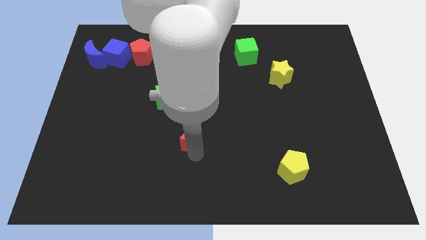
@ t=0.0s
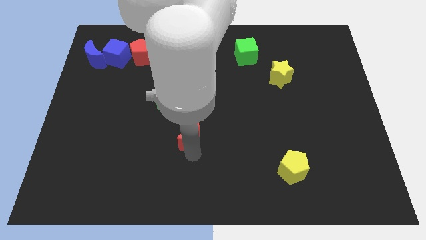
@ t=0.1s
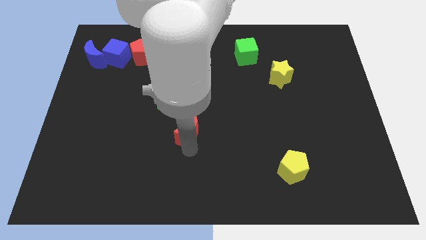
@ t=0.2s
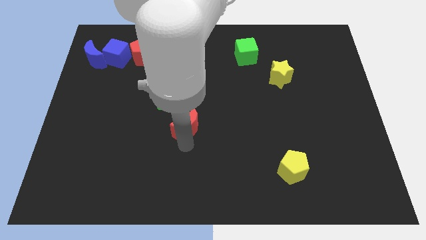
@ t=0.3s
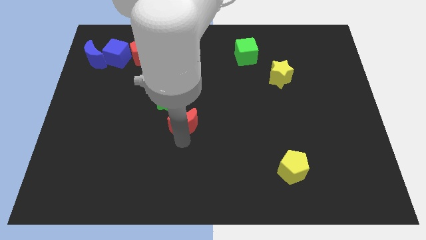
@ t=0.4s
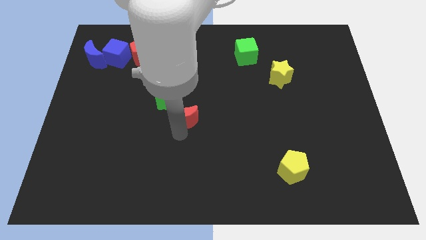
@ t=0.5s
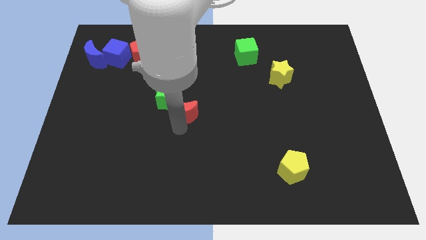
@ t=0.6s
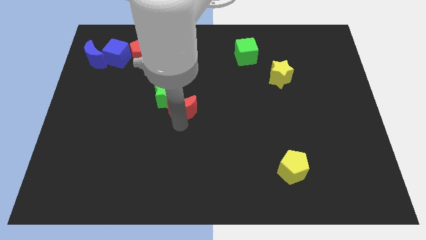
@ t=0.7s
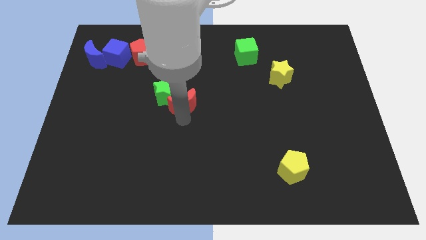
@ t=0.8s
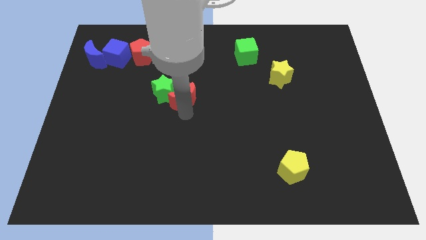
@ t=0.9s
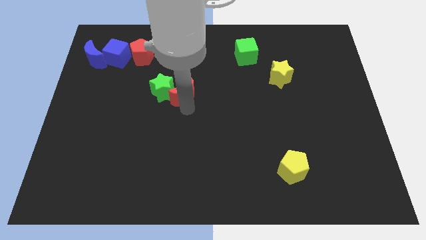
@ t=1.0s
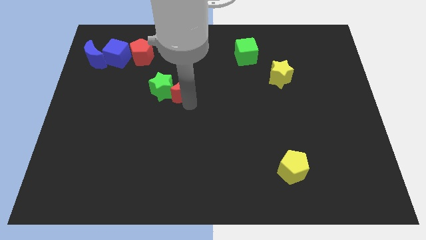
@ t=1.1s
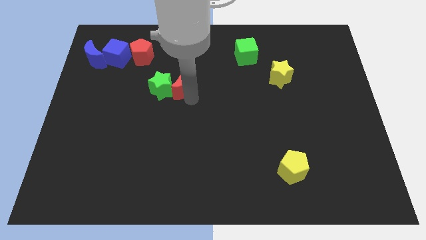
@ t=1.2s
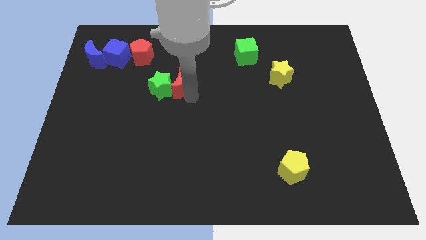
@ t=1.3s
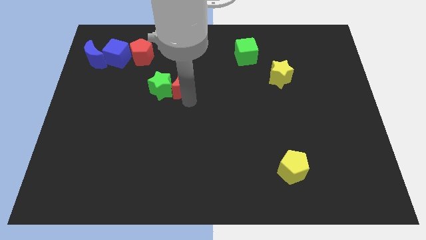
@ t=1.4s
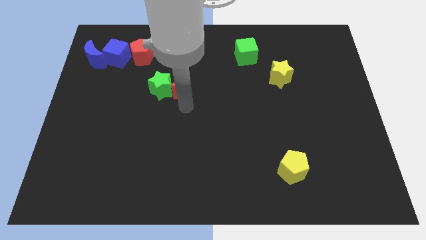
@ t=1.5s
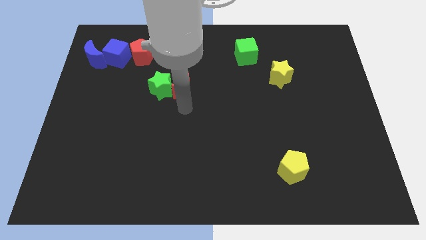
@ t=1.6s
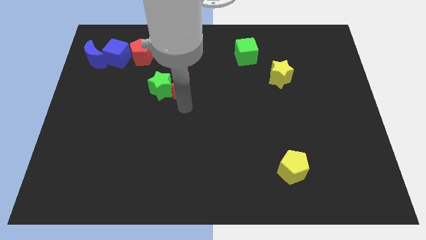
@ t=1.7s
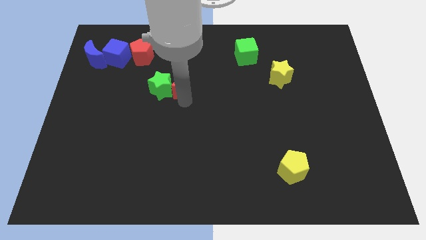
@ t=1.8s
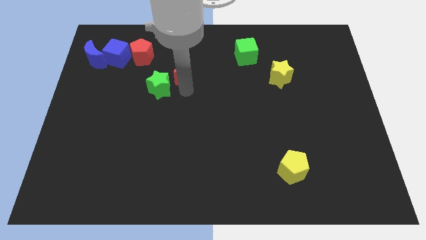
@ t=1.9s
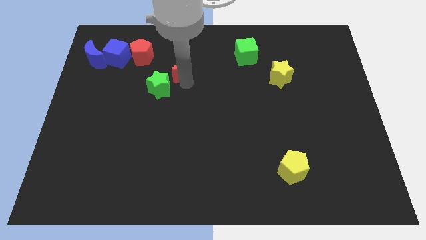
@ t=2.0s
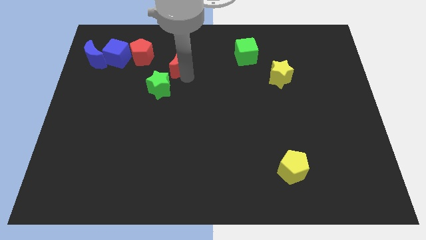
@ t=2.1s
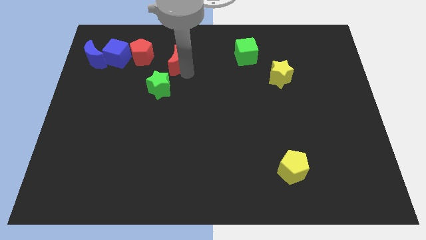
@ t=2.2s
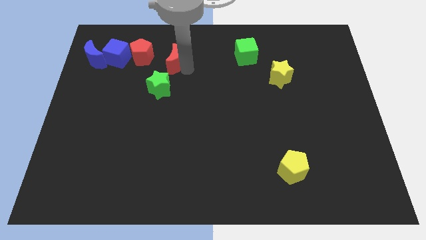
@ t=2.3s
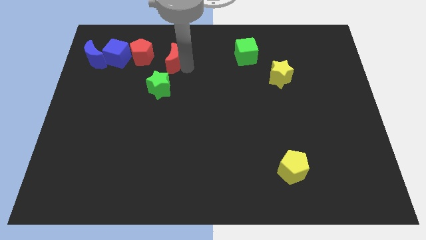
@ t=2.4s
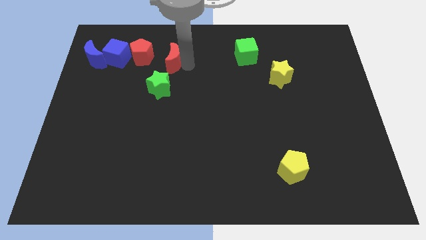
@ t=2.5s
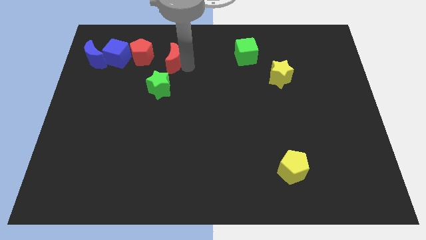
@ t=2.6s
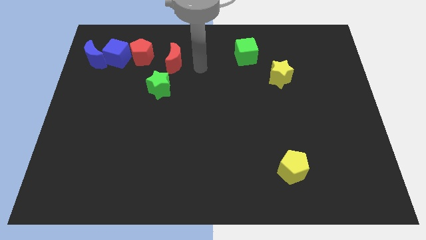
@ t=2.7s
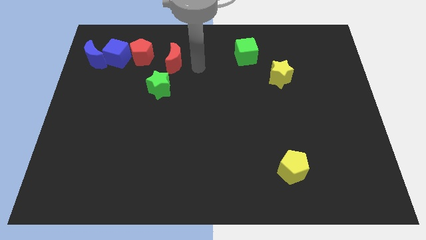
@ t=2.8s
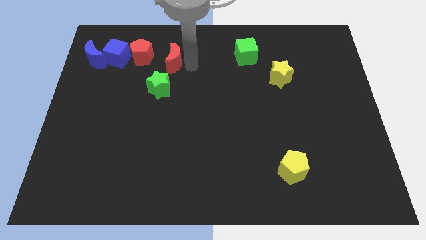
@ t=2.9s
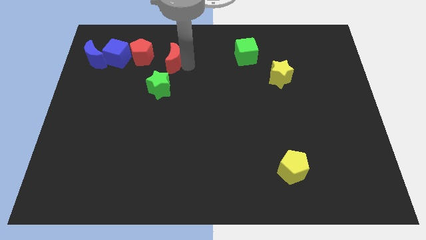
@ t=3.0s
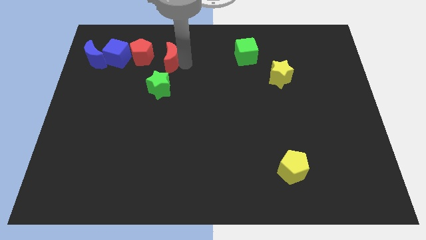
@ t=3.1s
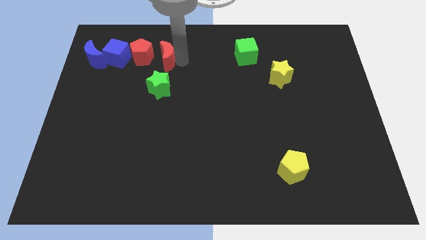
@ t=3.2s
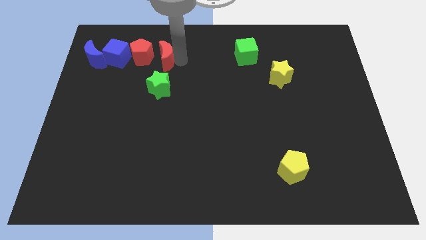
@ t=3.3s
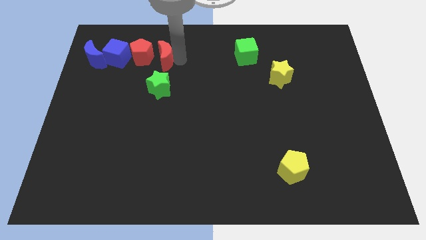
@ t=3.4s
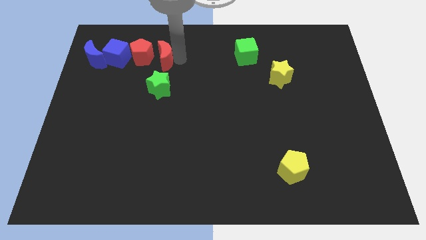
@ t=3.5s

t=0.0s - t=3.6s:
push the red crescent to the right of the red pentagon

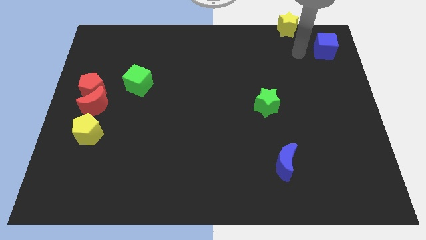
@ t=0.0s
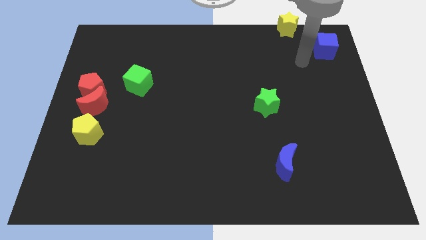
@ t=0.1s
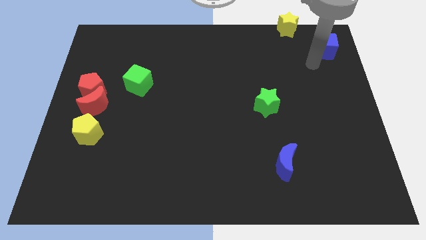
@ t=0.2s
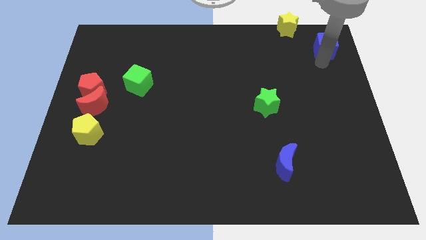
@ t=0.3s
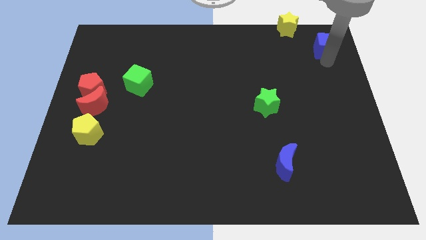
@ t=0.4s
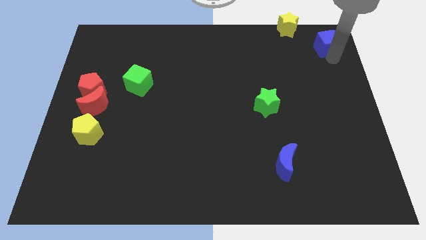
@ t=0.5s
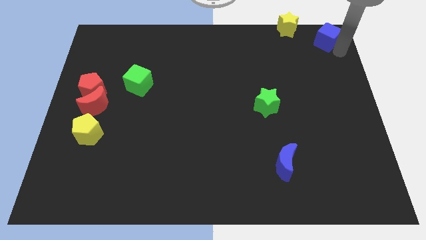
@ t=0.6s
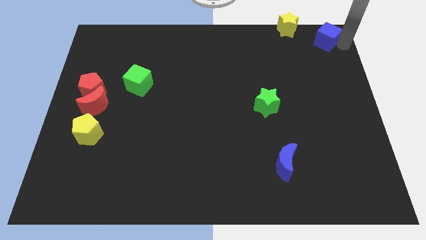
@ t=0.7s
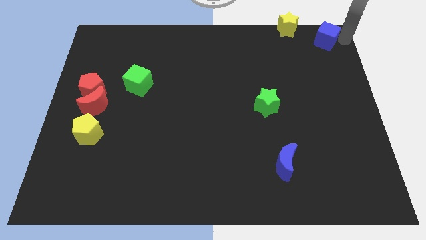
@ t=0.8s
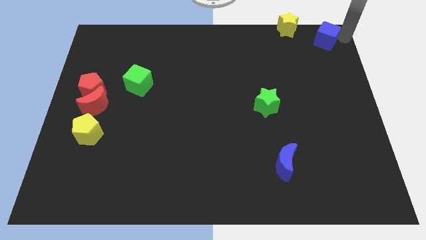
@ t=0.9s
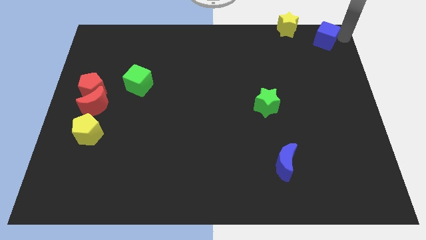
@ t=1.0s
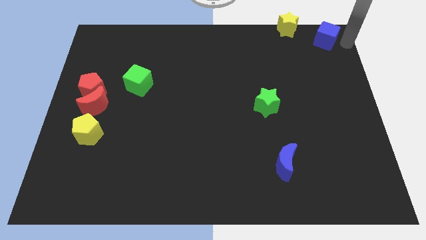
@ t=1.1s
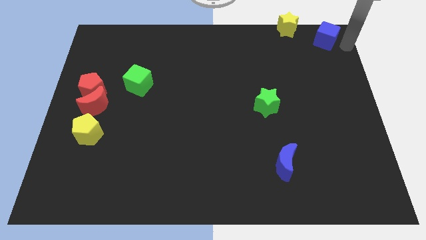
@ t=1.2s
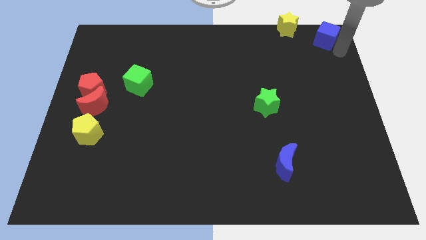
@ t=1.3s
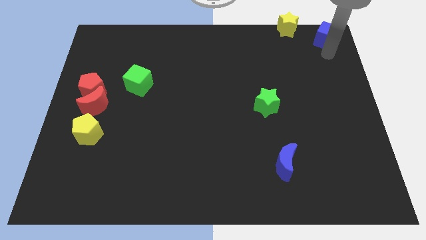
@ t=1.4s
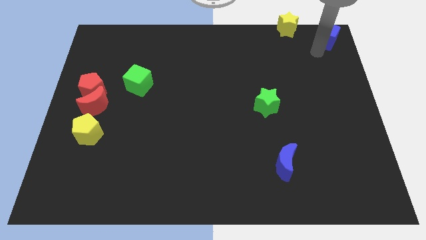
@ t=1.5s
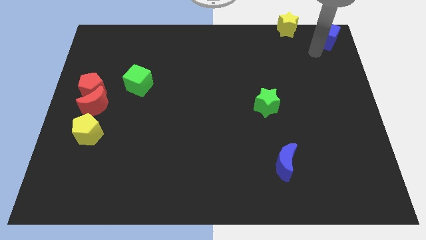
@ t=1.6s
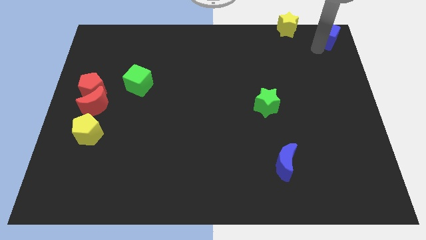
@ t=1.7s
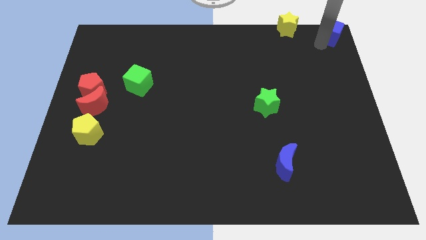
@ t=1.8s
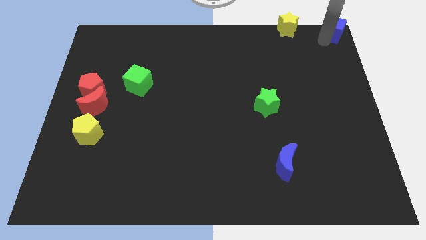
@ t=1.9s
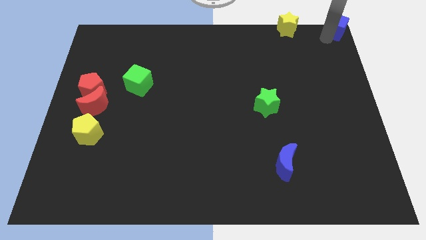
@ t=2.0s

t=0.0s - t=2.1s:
adjust the blue cube parallel to the right of yellow pentagon

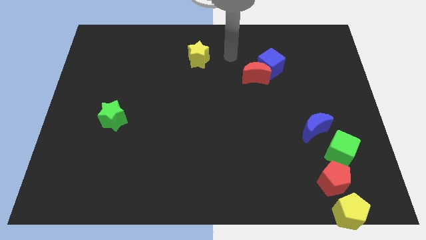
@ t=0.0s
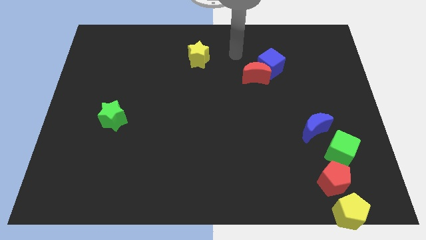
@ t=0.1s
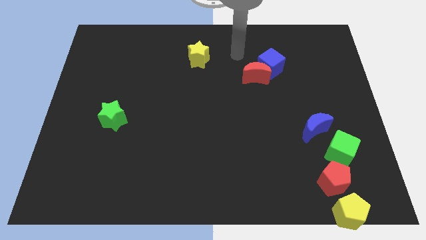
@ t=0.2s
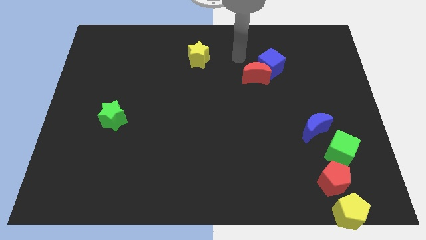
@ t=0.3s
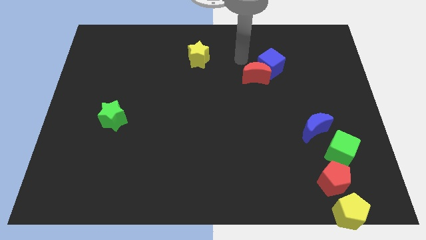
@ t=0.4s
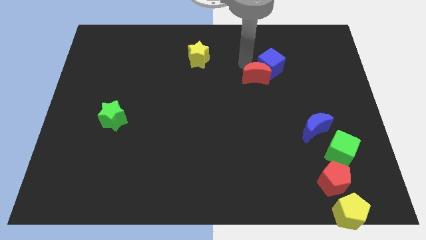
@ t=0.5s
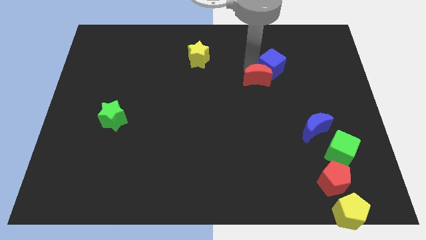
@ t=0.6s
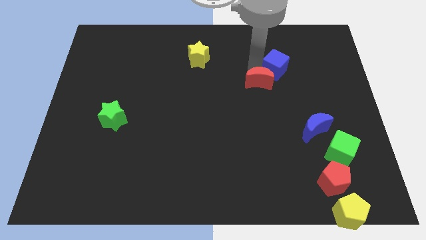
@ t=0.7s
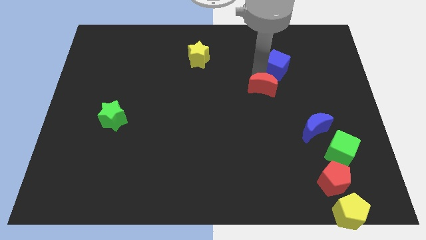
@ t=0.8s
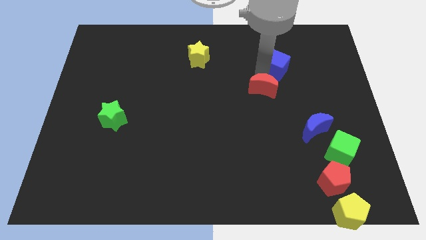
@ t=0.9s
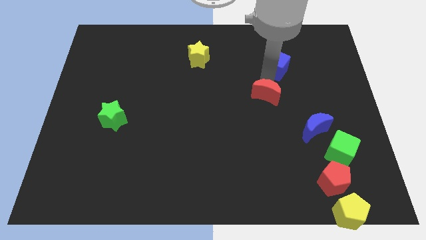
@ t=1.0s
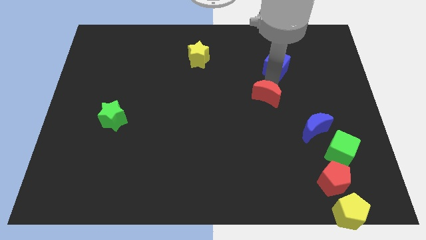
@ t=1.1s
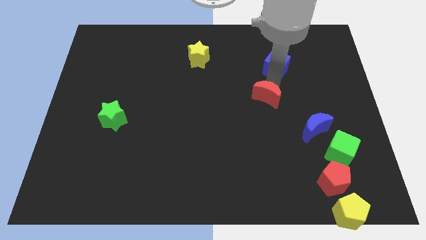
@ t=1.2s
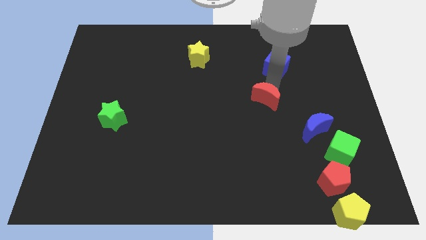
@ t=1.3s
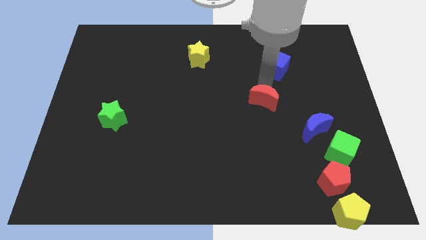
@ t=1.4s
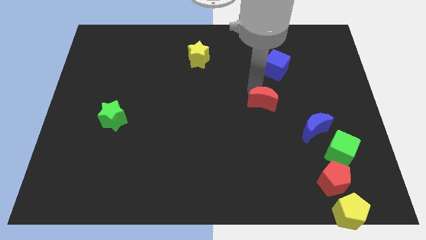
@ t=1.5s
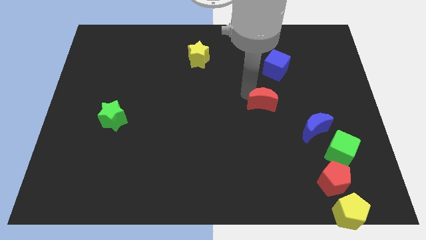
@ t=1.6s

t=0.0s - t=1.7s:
separate the red moon from the blue cube

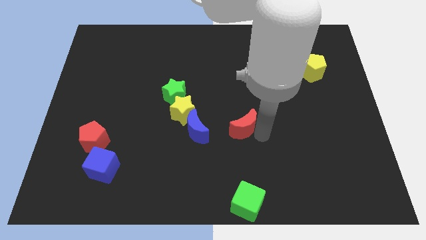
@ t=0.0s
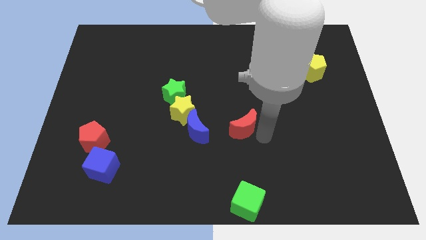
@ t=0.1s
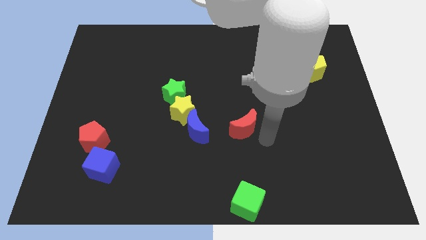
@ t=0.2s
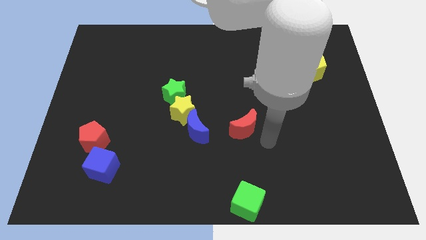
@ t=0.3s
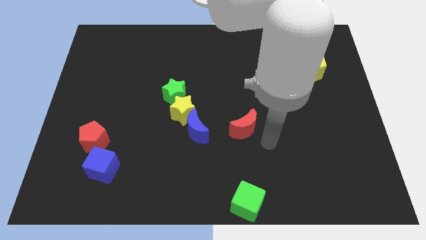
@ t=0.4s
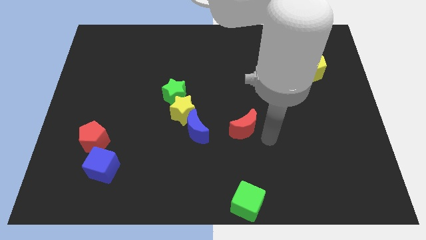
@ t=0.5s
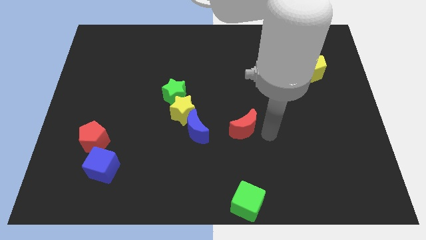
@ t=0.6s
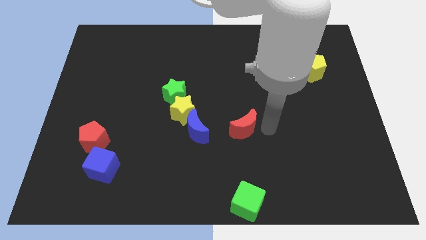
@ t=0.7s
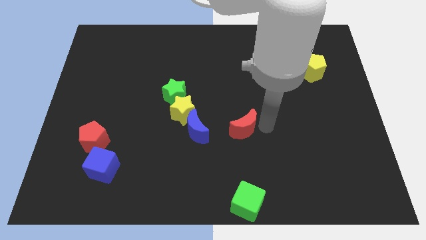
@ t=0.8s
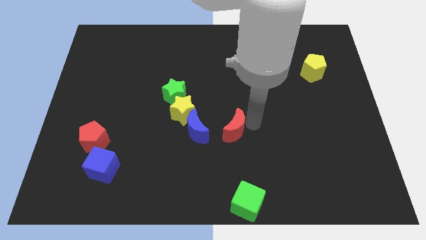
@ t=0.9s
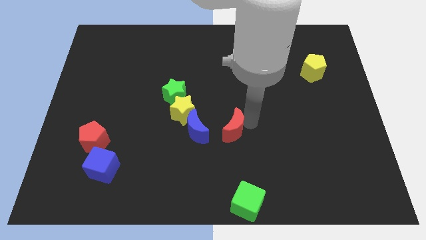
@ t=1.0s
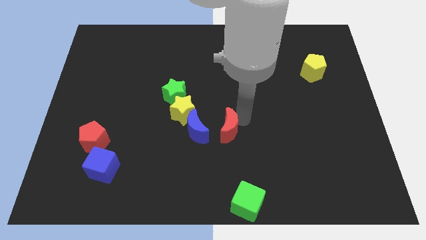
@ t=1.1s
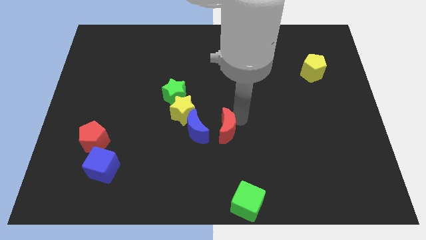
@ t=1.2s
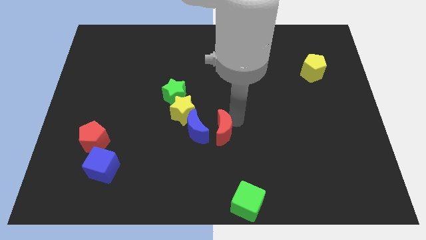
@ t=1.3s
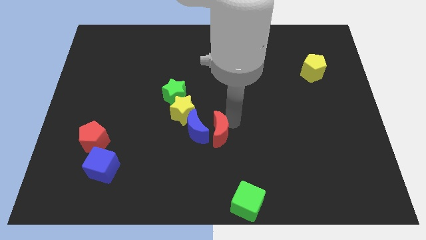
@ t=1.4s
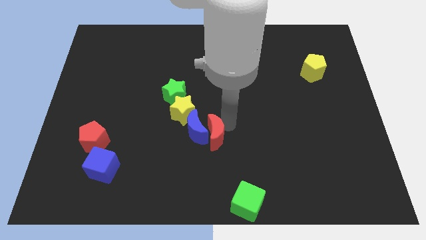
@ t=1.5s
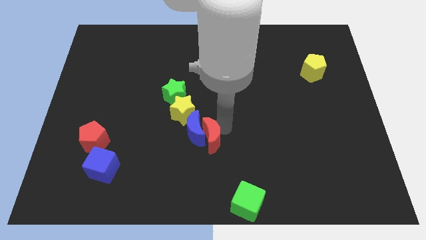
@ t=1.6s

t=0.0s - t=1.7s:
move red moon into blue moon
